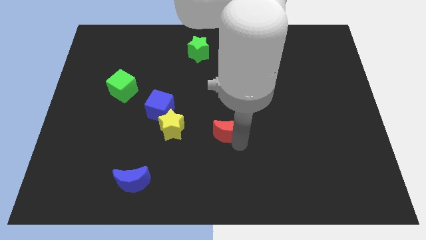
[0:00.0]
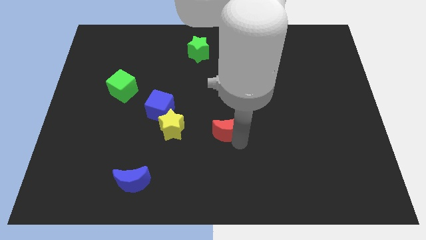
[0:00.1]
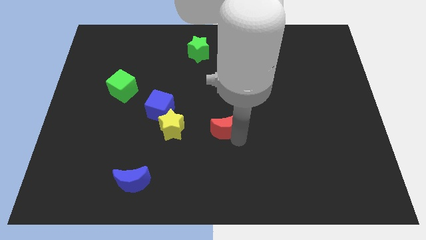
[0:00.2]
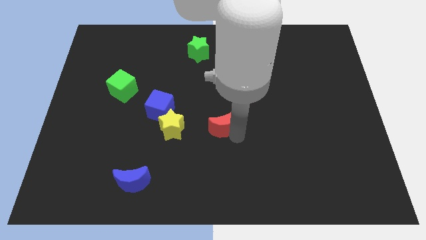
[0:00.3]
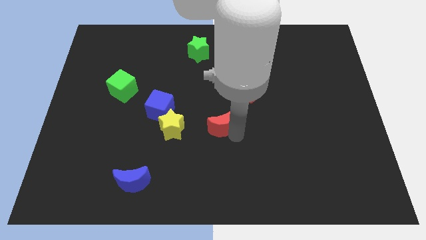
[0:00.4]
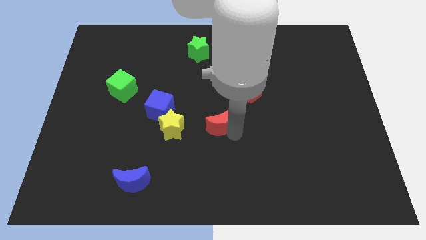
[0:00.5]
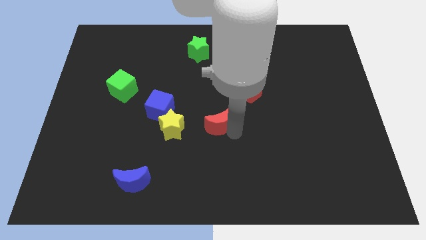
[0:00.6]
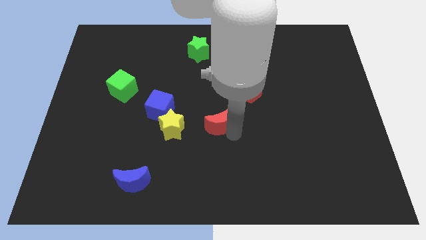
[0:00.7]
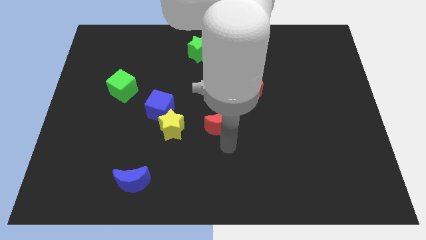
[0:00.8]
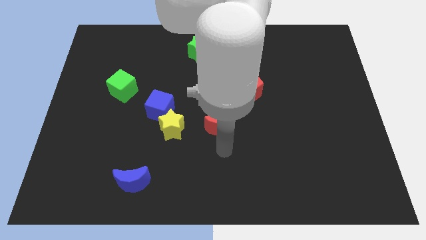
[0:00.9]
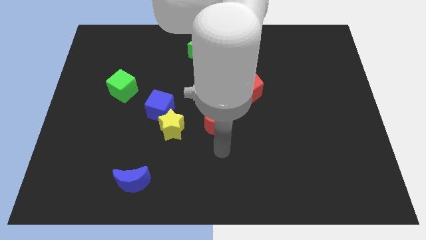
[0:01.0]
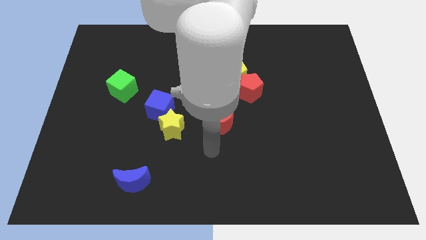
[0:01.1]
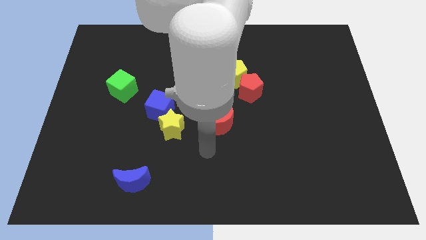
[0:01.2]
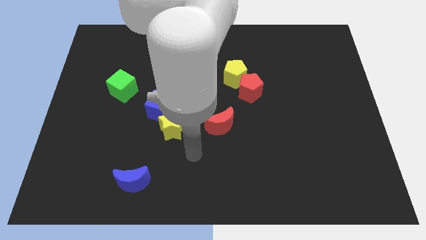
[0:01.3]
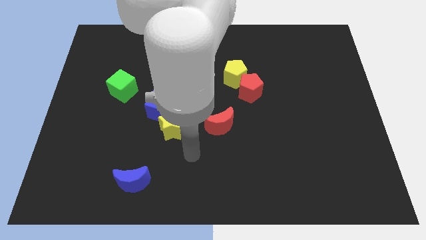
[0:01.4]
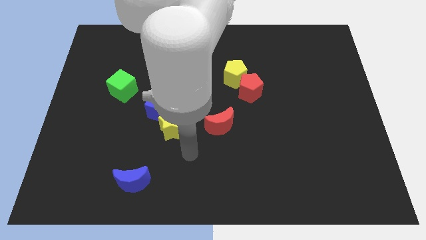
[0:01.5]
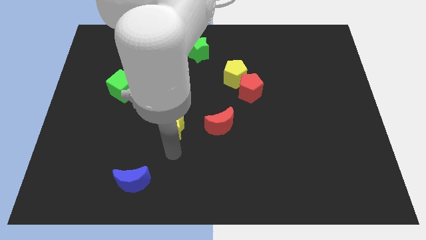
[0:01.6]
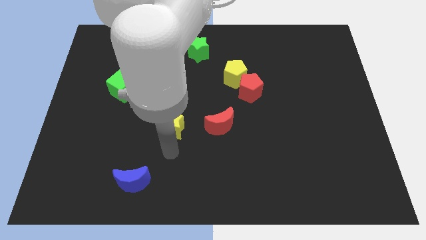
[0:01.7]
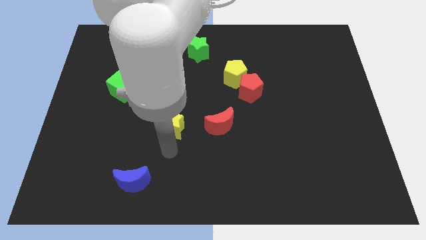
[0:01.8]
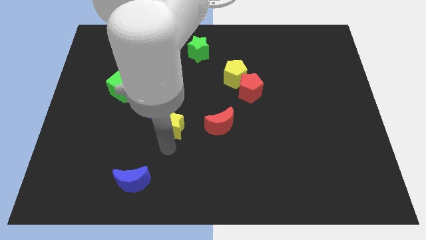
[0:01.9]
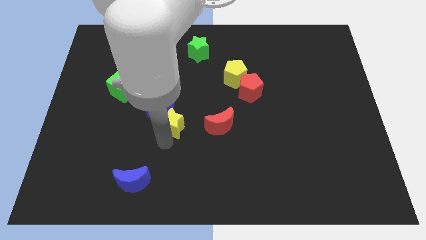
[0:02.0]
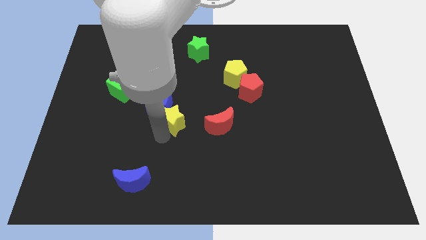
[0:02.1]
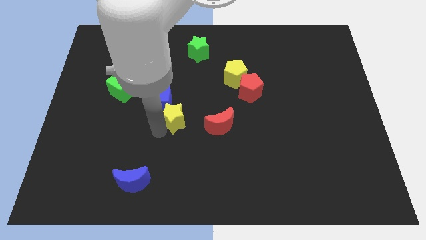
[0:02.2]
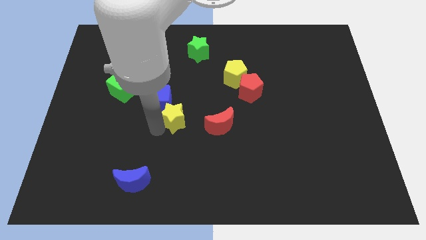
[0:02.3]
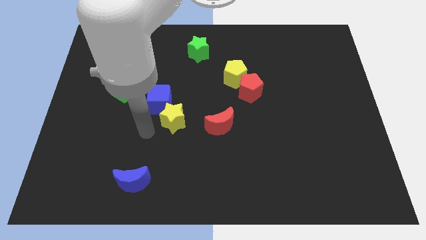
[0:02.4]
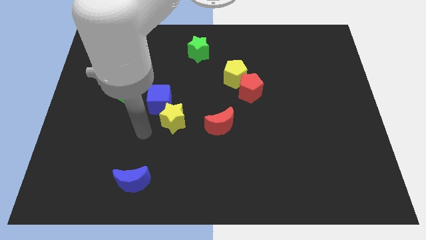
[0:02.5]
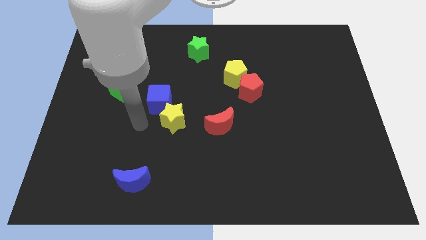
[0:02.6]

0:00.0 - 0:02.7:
slightly push the yellow star up

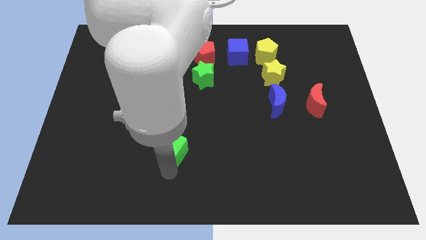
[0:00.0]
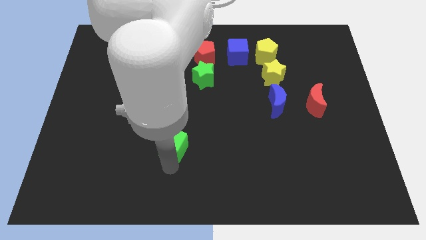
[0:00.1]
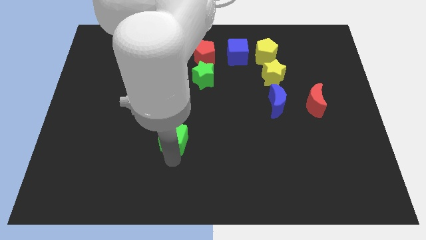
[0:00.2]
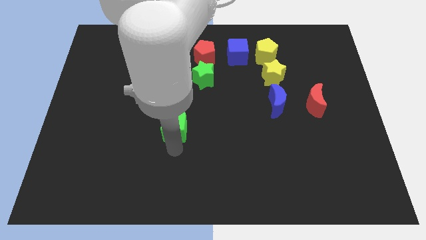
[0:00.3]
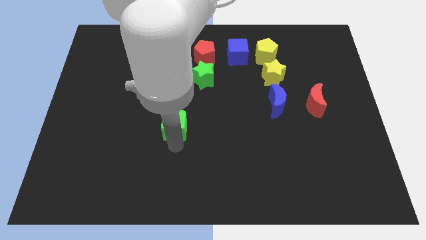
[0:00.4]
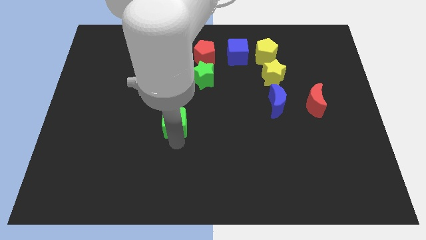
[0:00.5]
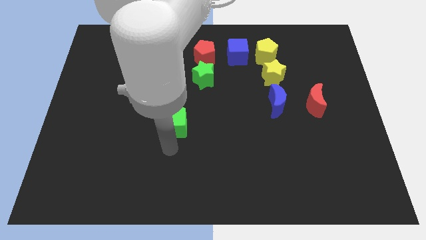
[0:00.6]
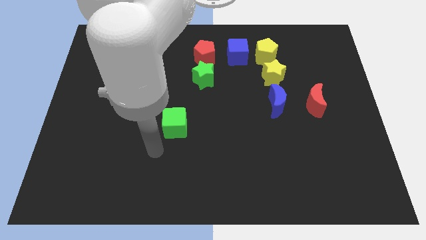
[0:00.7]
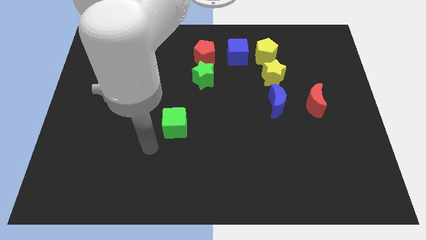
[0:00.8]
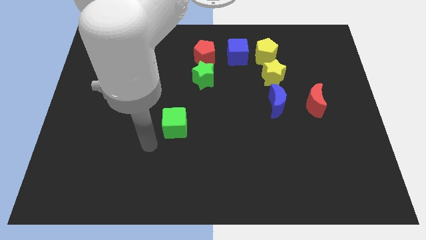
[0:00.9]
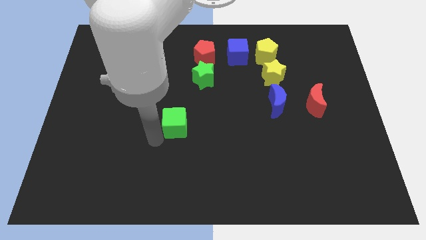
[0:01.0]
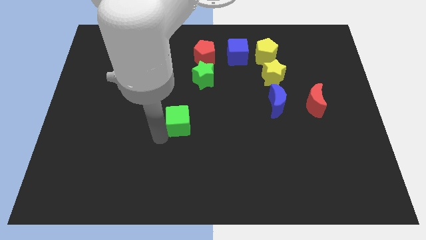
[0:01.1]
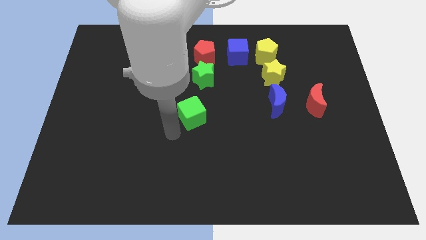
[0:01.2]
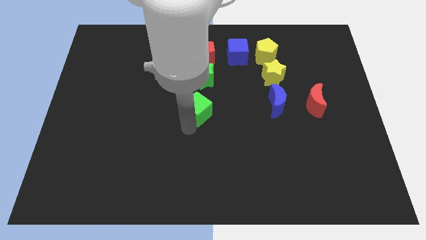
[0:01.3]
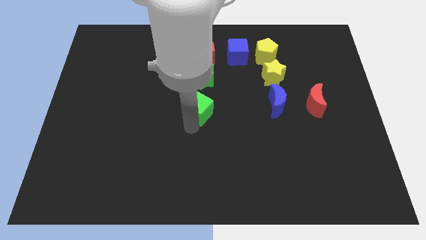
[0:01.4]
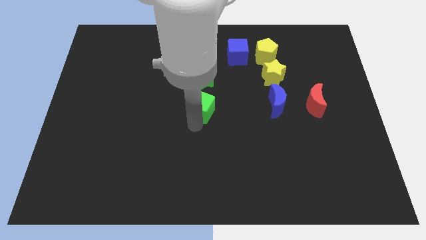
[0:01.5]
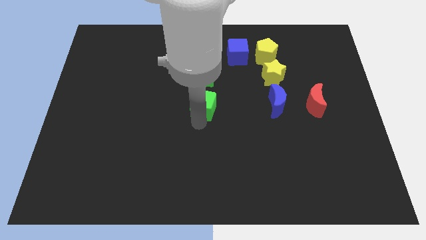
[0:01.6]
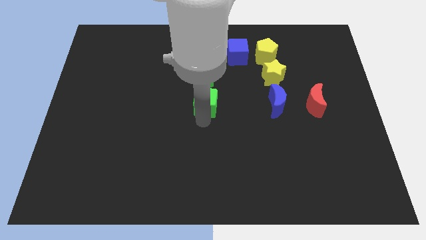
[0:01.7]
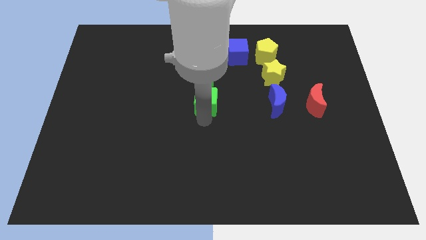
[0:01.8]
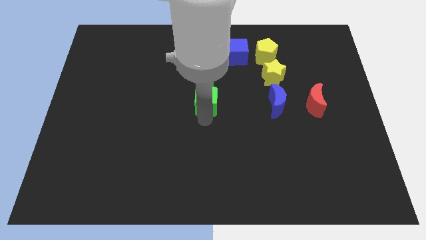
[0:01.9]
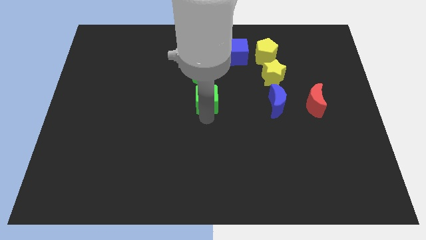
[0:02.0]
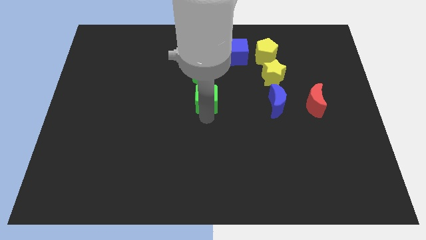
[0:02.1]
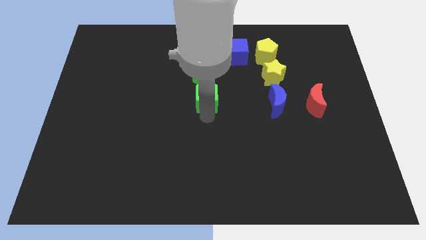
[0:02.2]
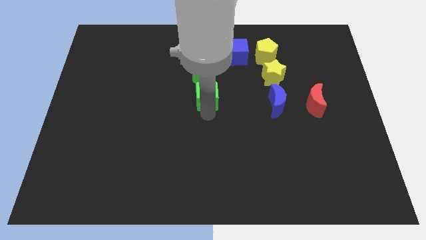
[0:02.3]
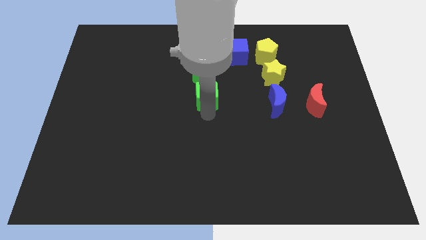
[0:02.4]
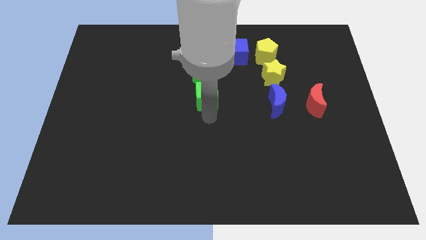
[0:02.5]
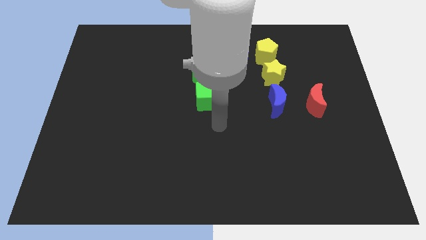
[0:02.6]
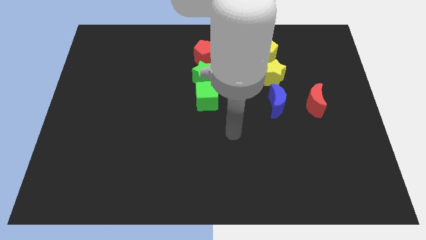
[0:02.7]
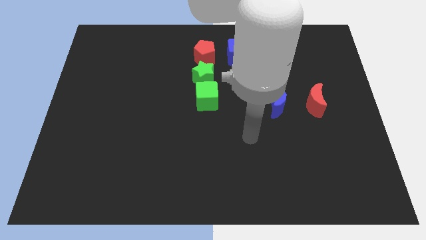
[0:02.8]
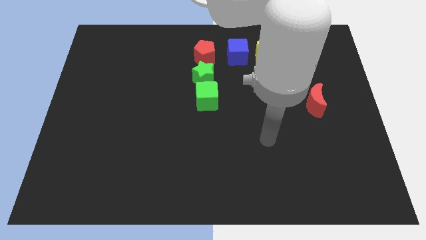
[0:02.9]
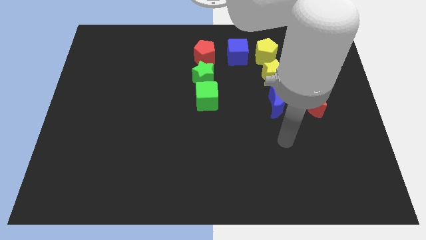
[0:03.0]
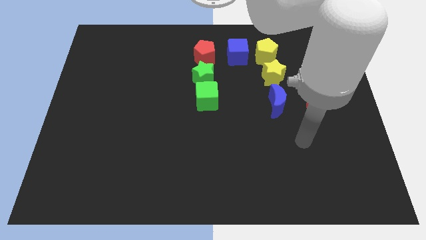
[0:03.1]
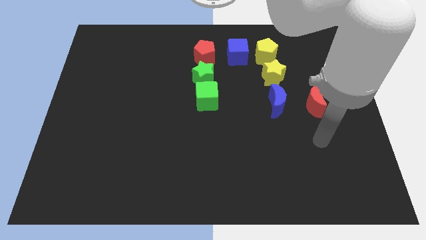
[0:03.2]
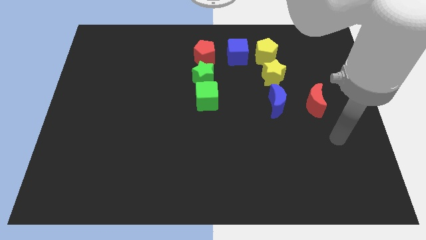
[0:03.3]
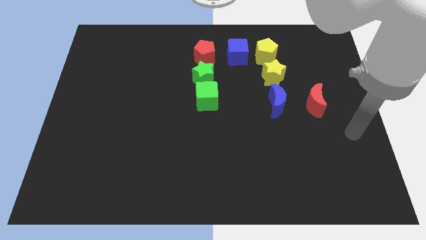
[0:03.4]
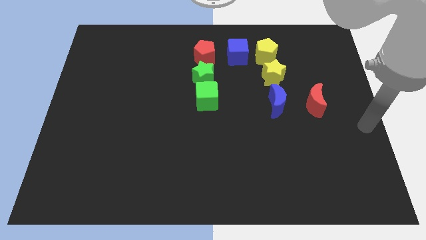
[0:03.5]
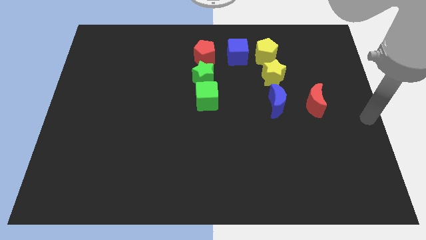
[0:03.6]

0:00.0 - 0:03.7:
slightly move the green cube to the top

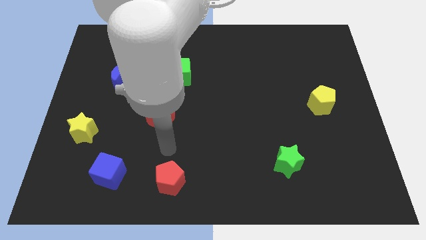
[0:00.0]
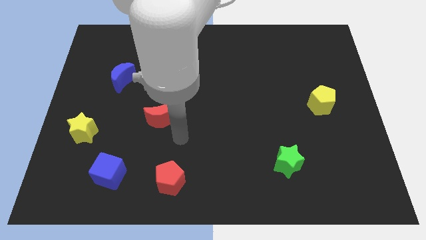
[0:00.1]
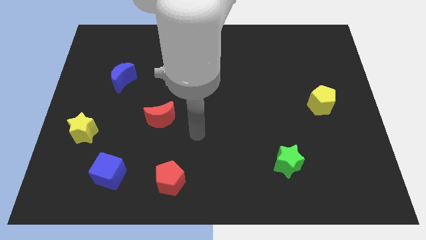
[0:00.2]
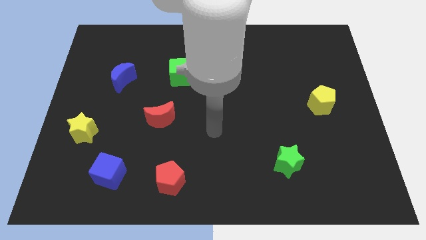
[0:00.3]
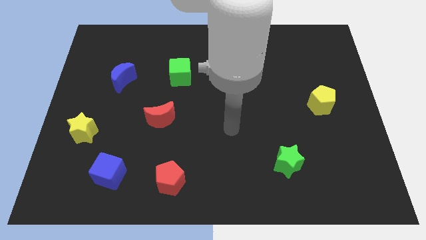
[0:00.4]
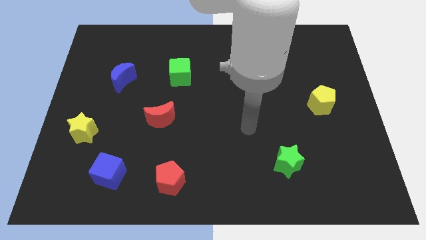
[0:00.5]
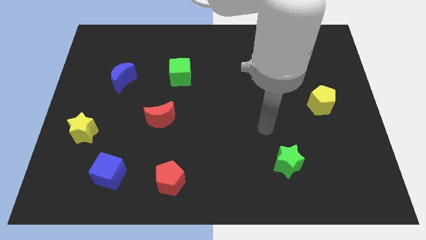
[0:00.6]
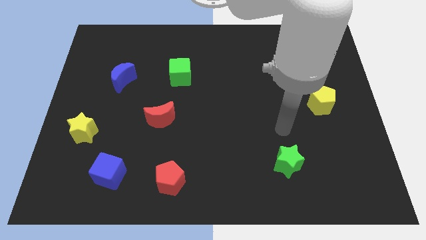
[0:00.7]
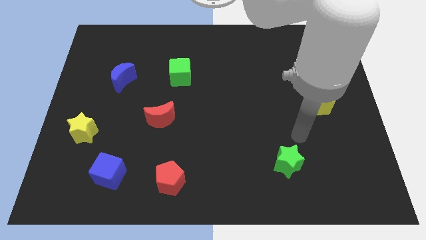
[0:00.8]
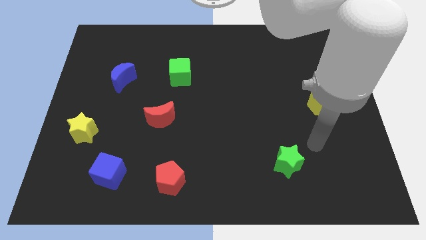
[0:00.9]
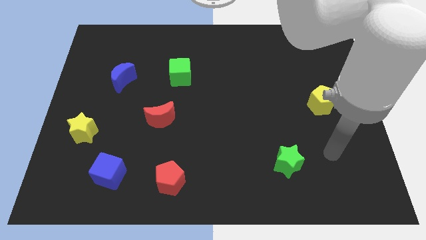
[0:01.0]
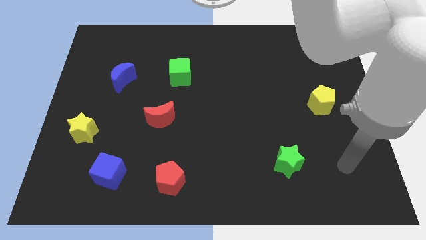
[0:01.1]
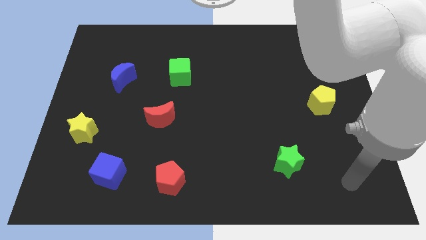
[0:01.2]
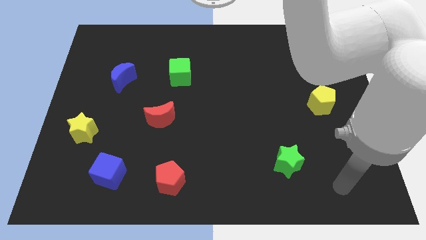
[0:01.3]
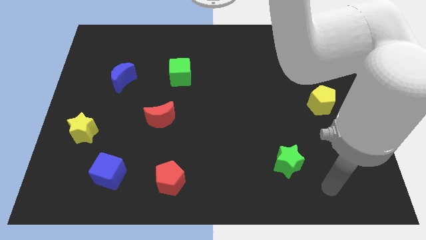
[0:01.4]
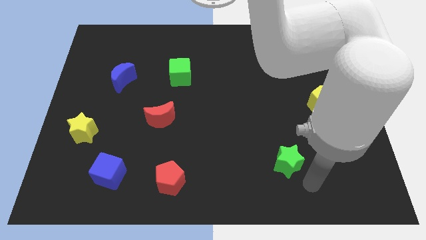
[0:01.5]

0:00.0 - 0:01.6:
point your arm to the bottom right side of the green star

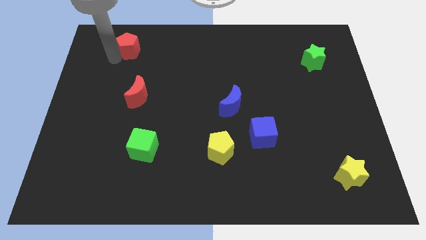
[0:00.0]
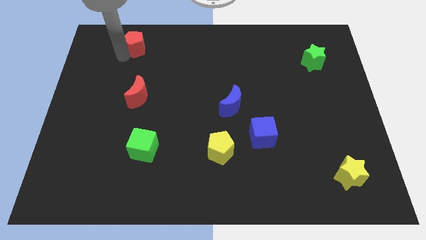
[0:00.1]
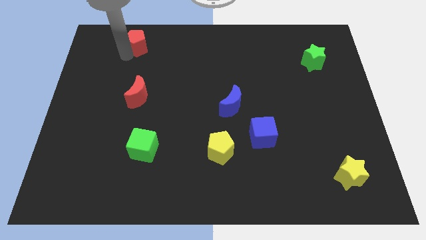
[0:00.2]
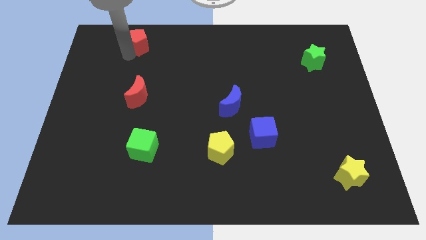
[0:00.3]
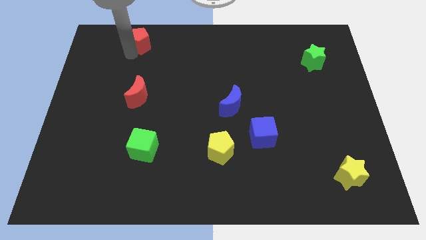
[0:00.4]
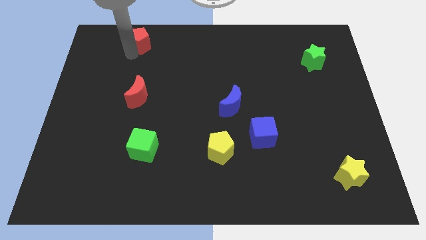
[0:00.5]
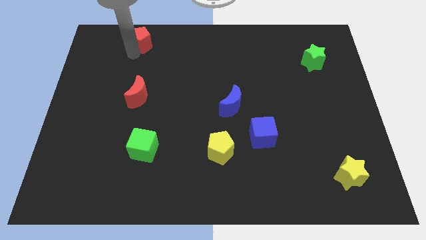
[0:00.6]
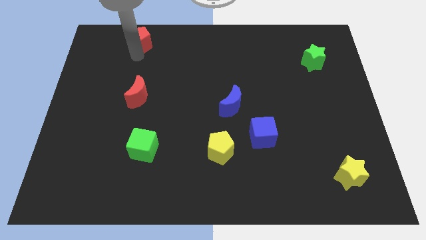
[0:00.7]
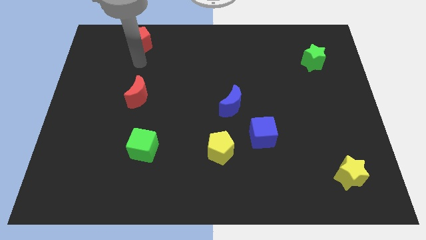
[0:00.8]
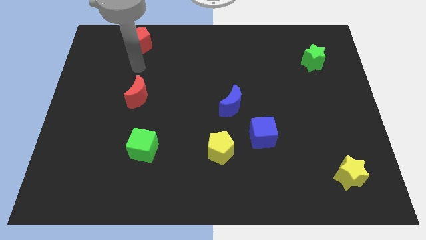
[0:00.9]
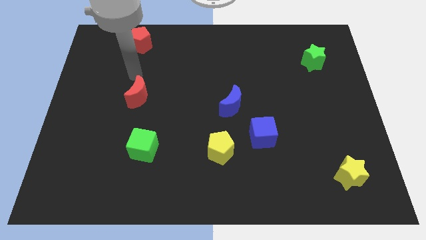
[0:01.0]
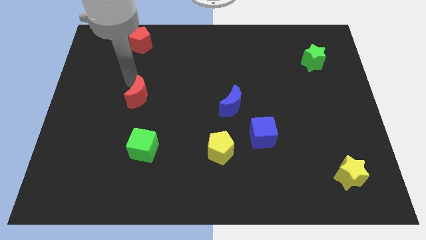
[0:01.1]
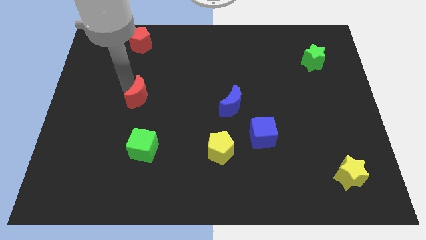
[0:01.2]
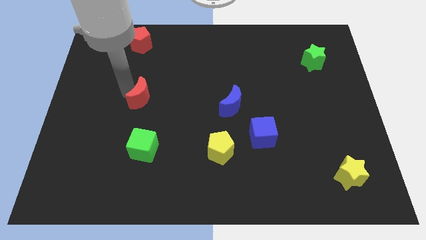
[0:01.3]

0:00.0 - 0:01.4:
push the red pentagon above the red moon
